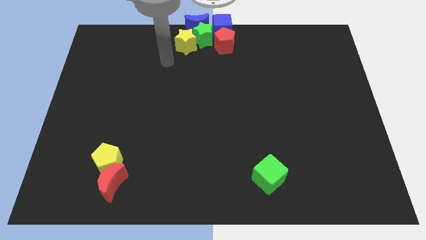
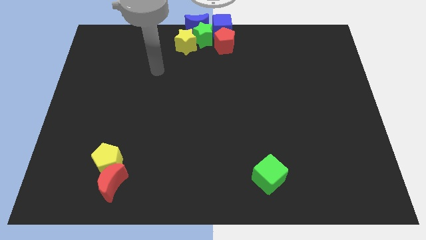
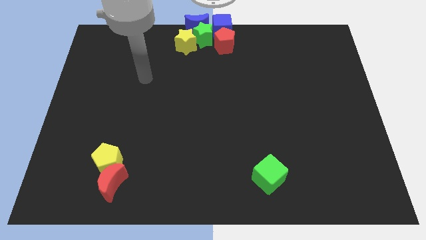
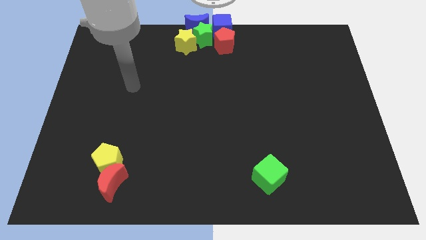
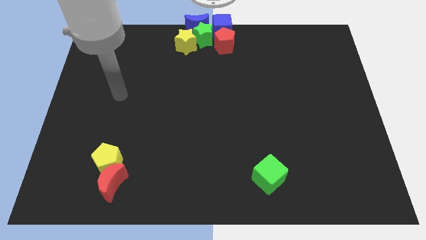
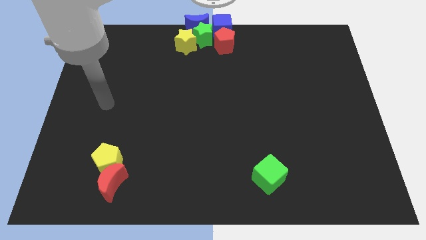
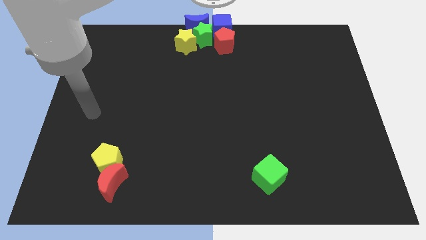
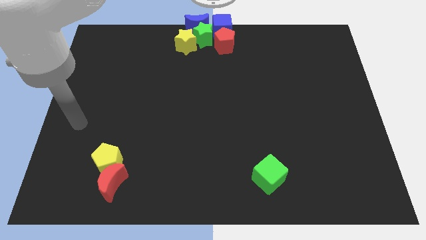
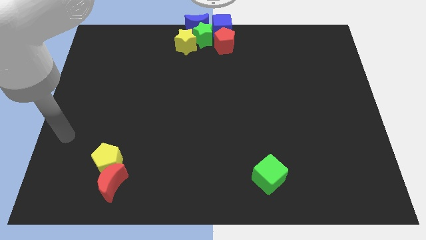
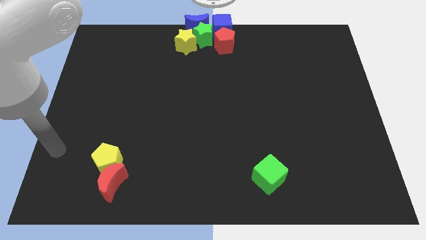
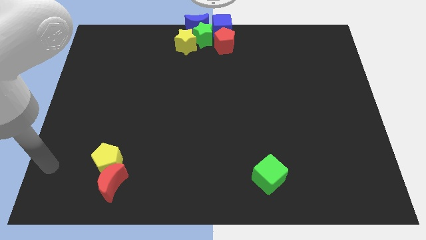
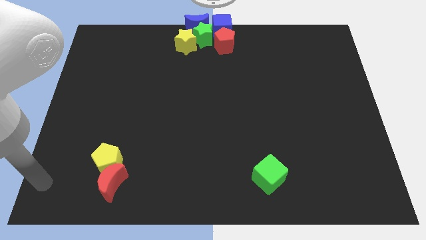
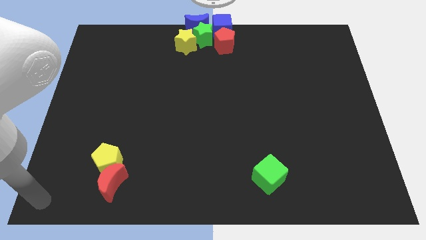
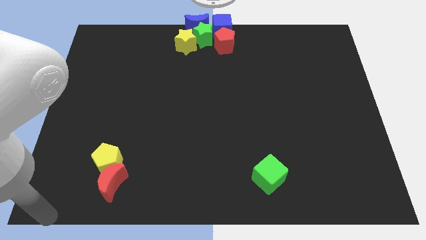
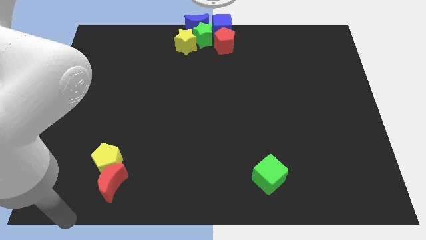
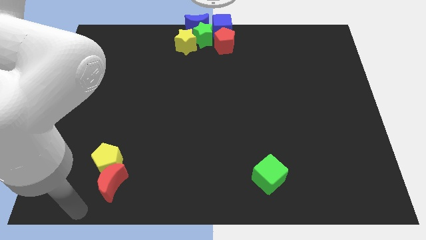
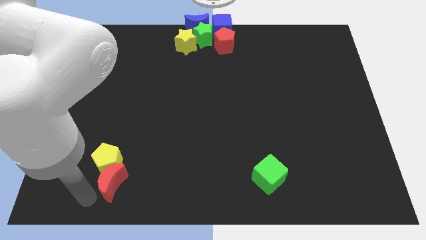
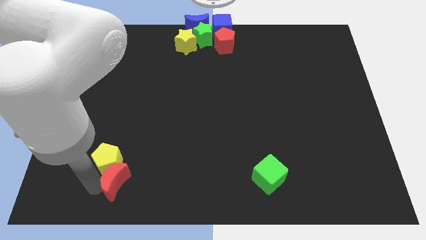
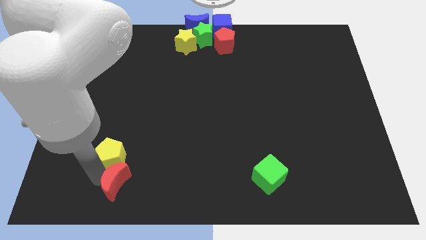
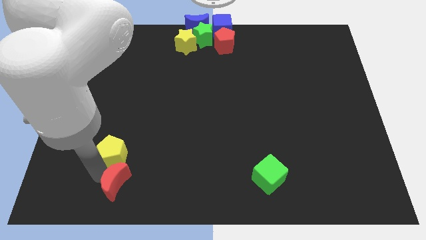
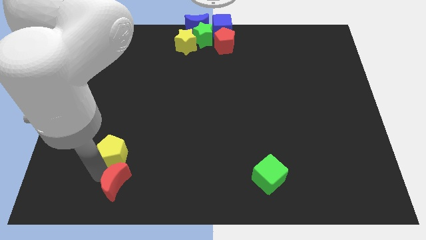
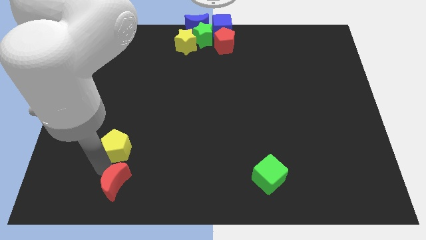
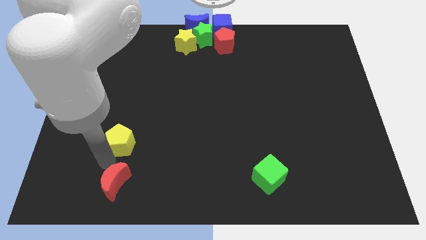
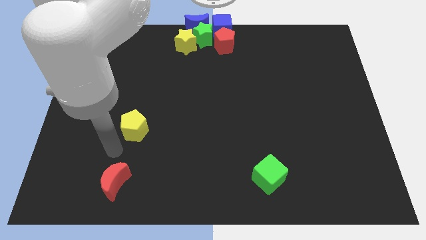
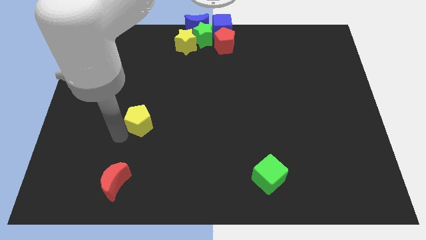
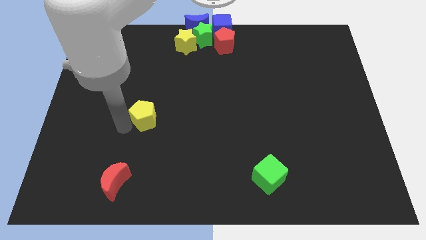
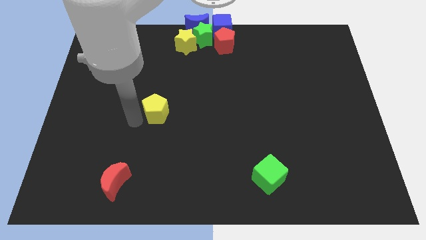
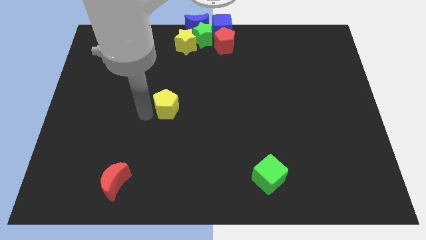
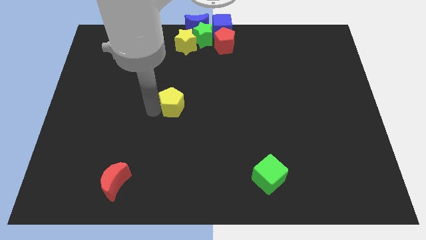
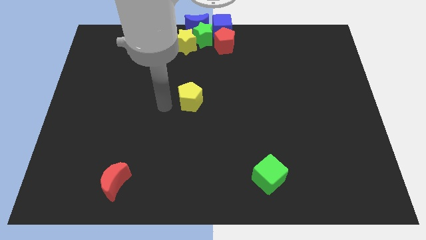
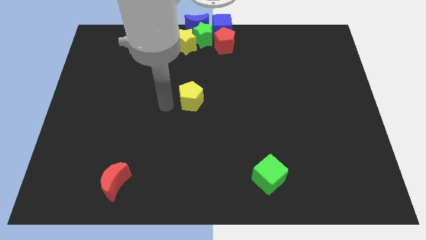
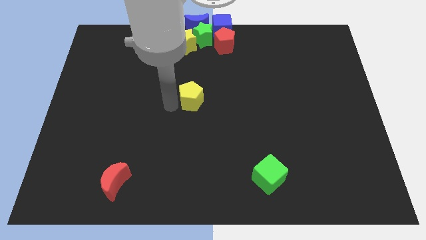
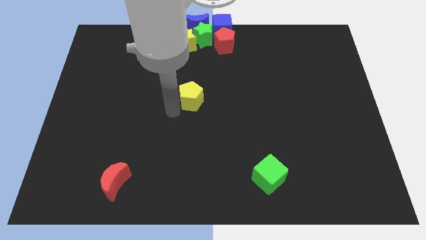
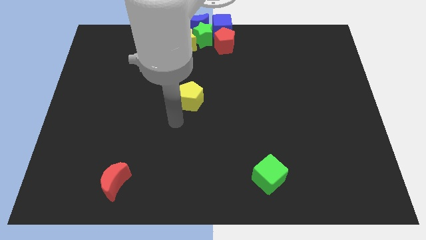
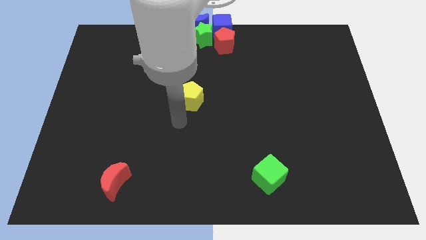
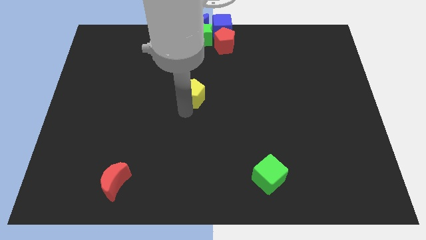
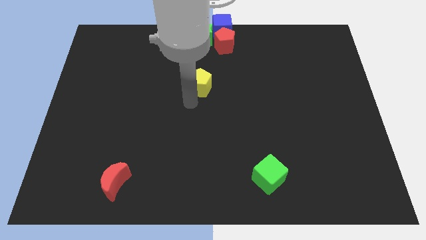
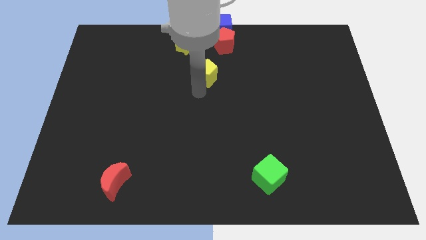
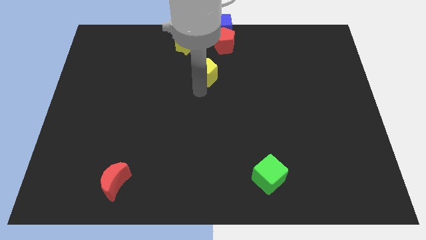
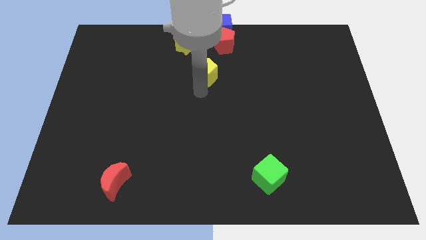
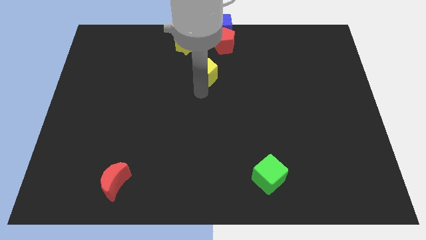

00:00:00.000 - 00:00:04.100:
move the yellow pentagon vertically below the group of blocks

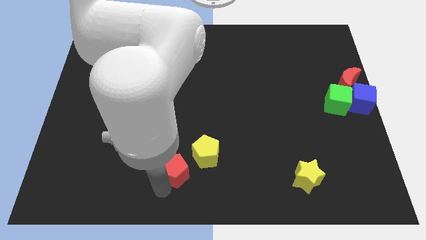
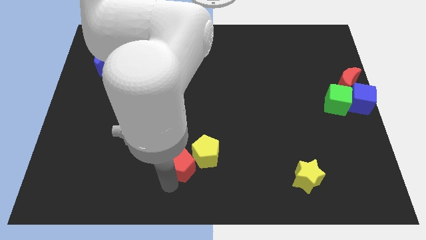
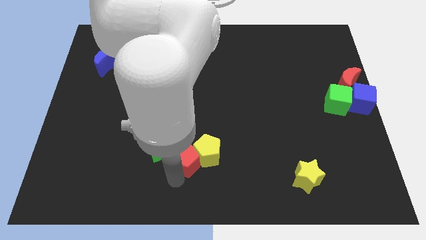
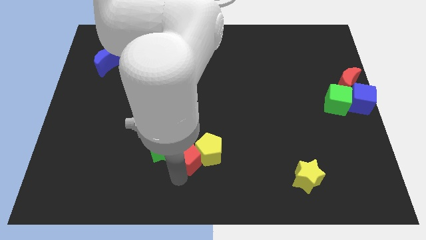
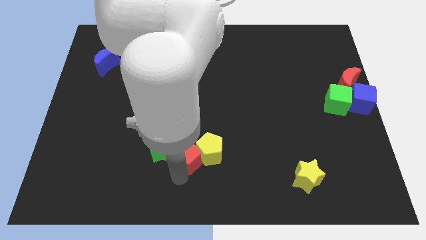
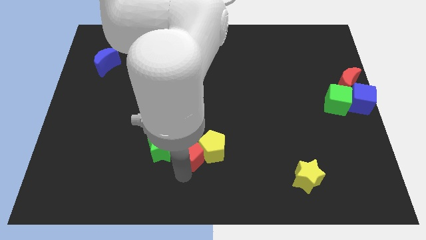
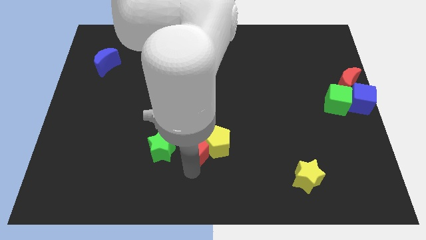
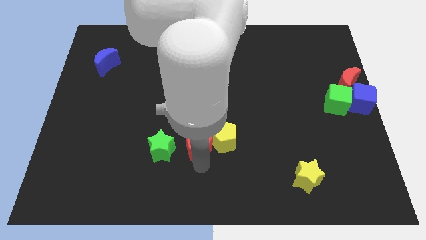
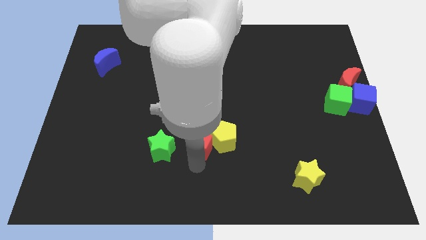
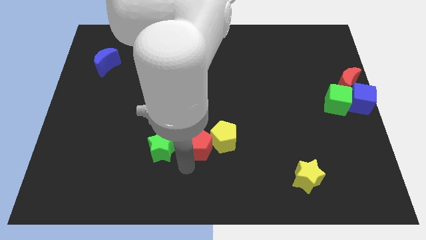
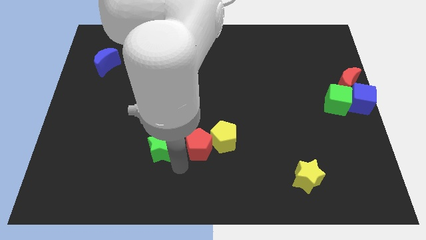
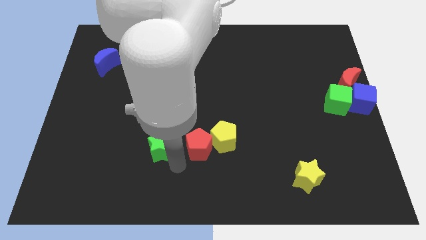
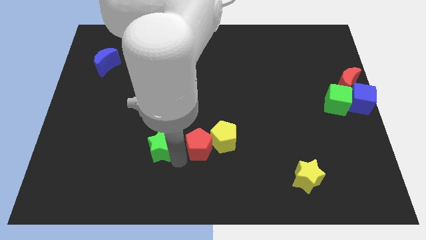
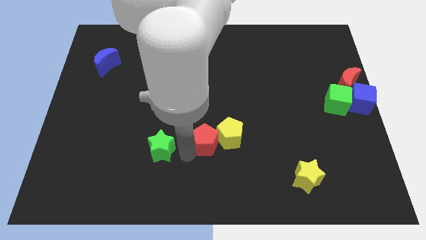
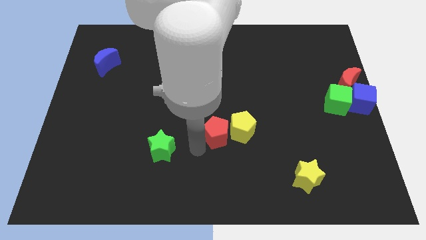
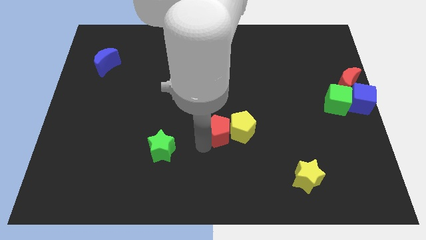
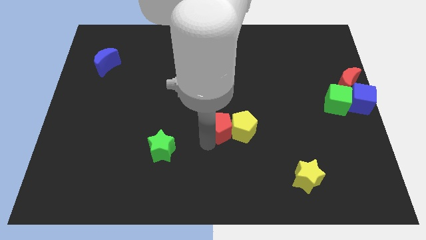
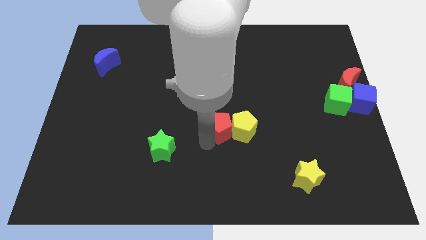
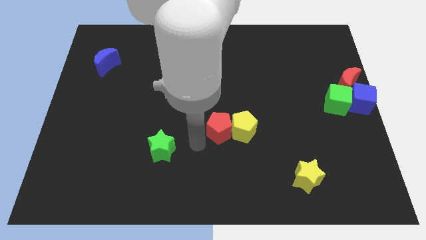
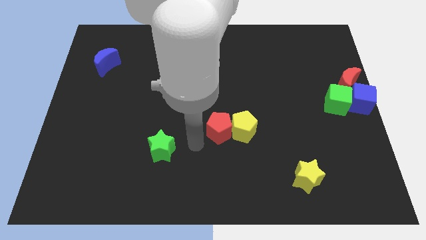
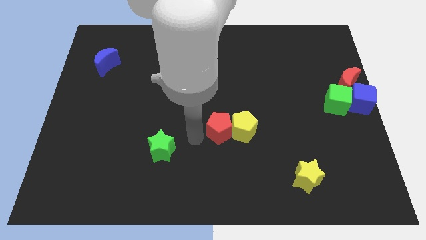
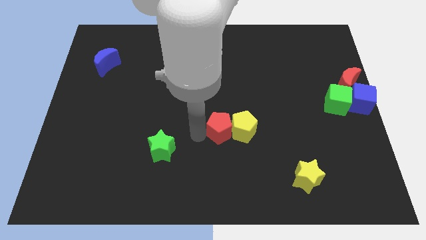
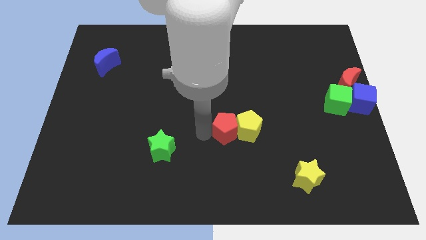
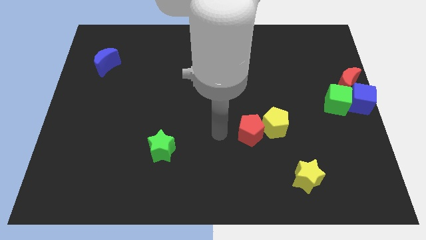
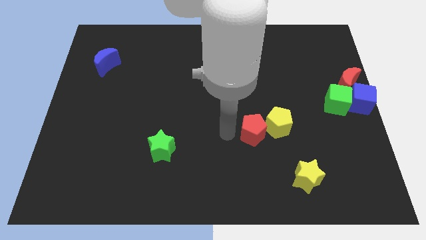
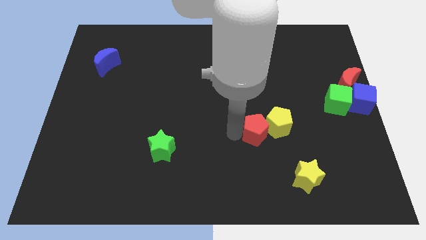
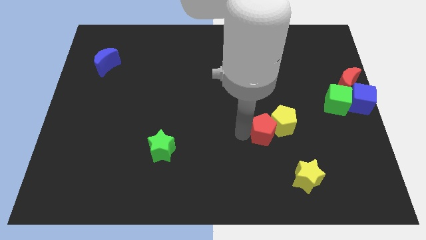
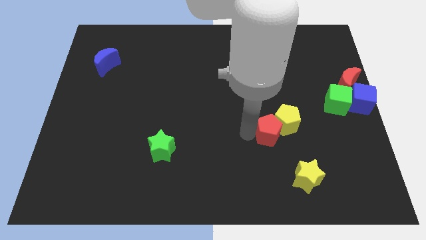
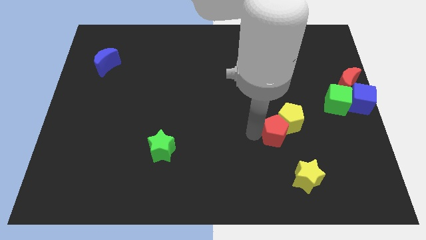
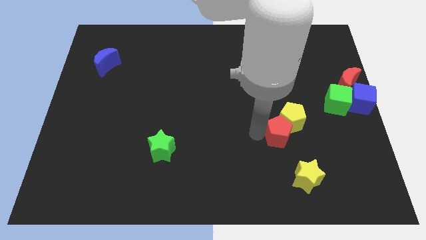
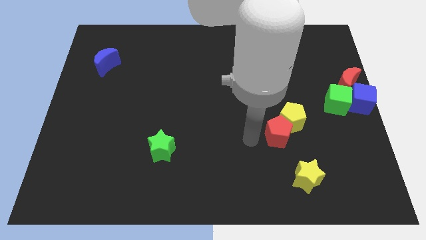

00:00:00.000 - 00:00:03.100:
move red and yellow pentagons towards green cube

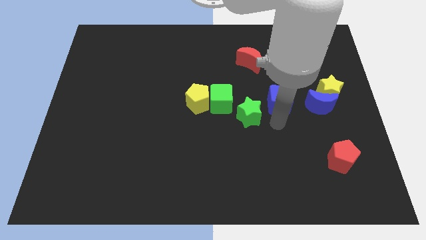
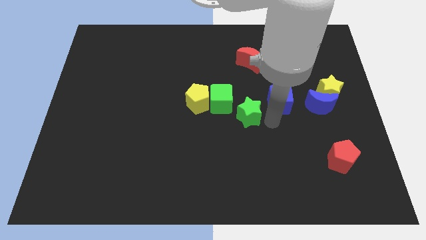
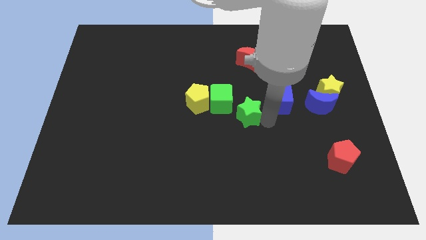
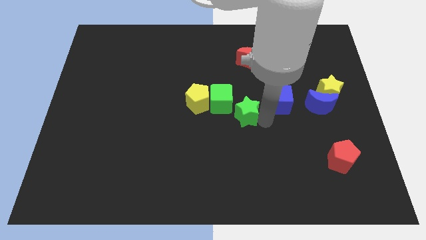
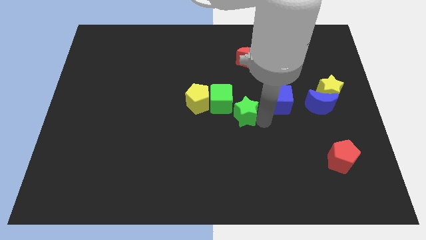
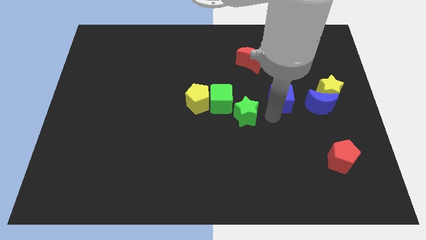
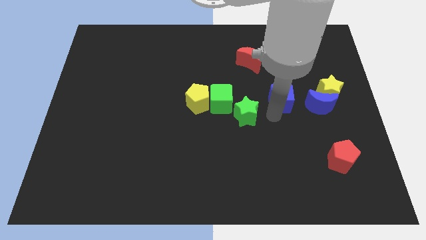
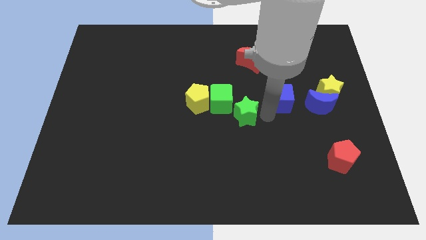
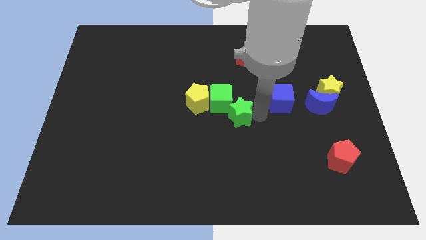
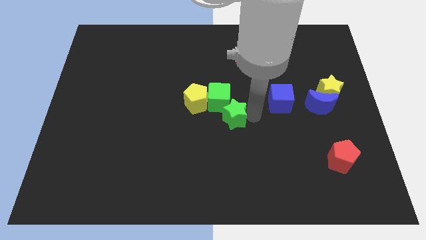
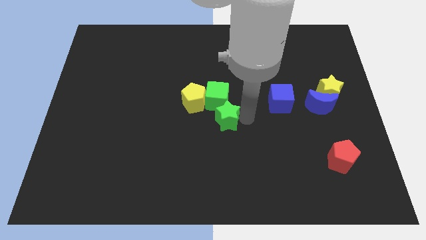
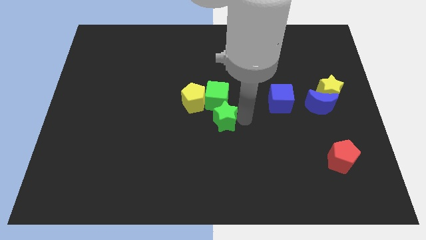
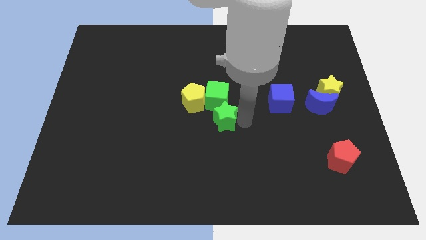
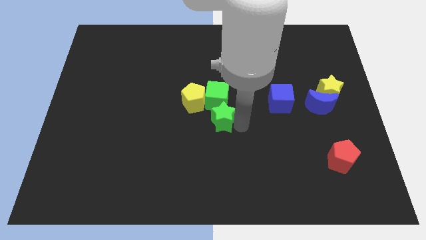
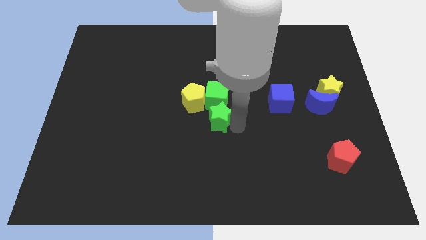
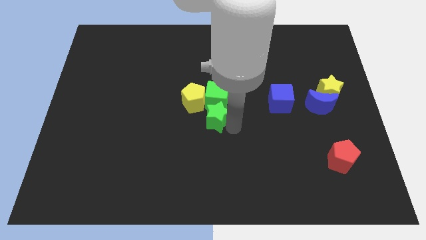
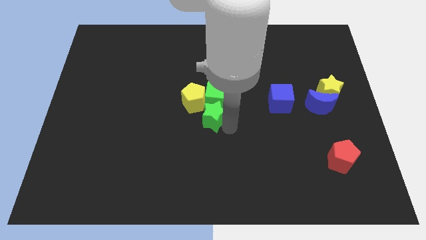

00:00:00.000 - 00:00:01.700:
move the green star below to the green cube

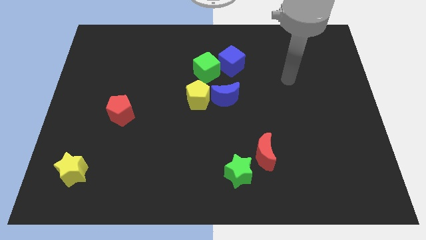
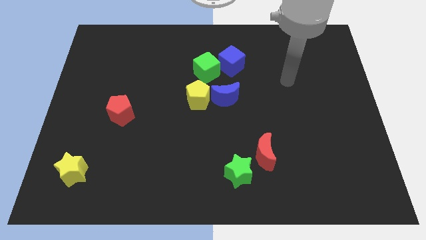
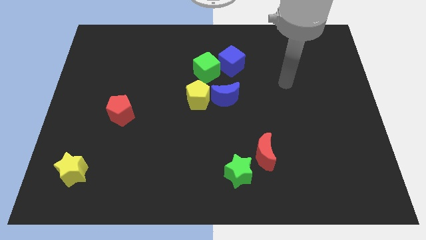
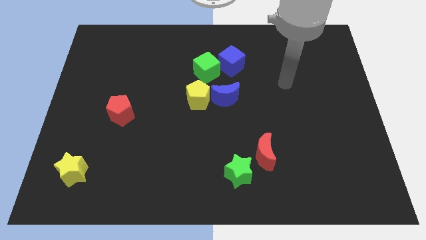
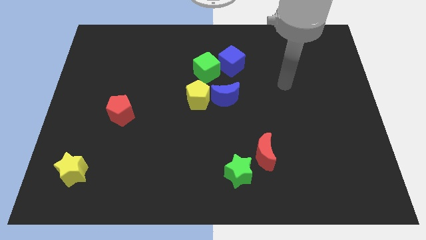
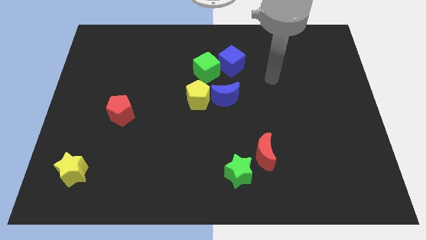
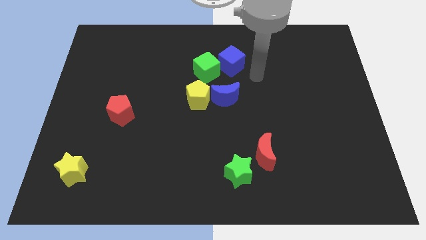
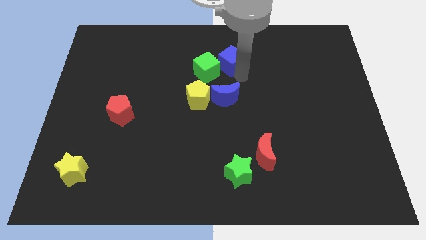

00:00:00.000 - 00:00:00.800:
place arm close to blue cube
